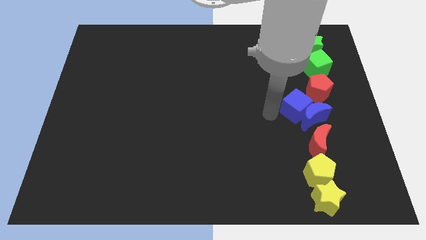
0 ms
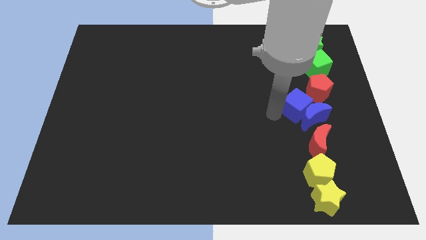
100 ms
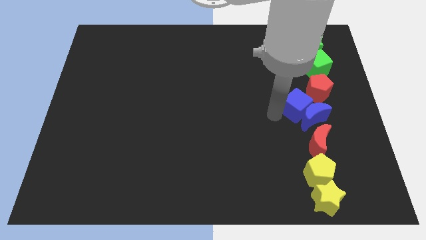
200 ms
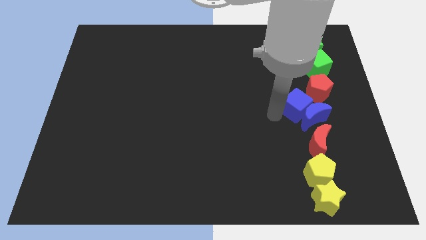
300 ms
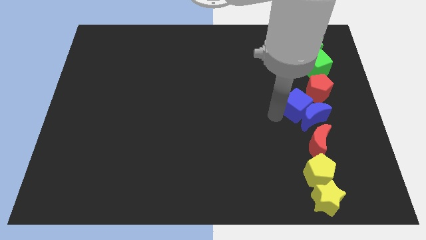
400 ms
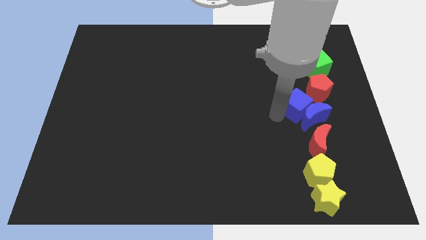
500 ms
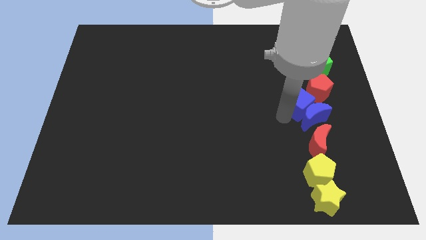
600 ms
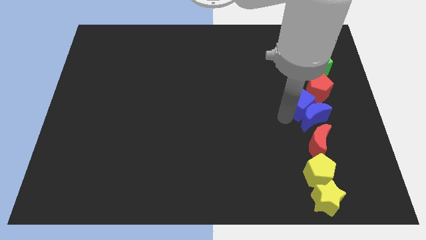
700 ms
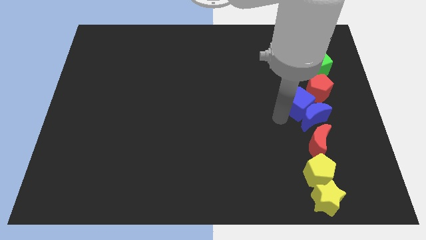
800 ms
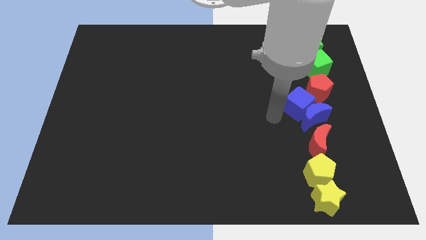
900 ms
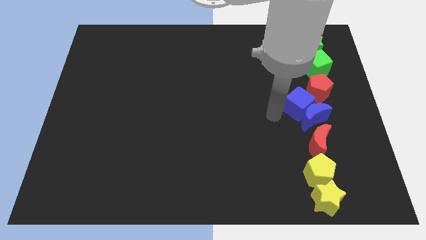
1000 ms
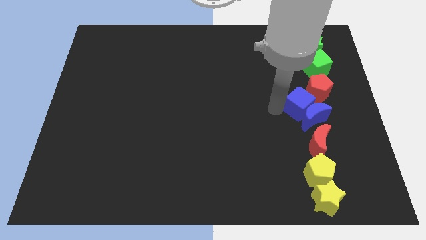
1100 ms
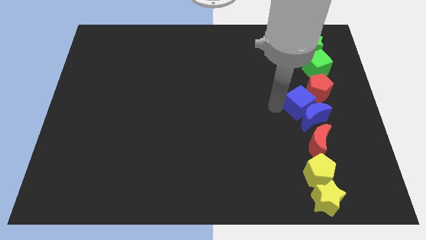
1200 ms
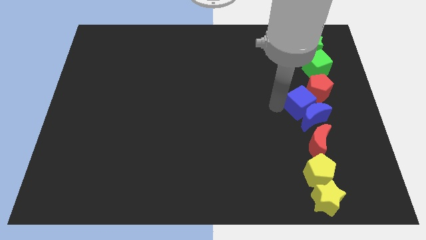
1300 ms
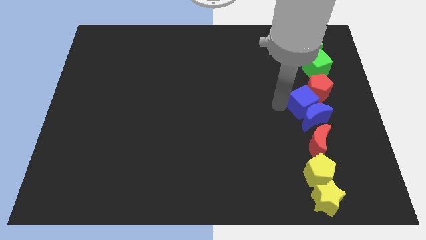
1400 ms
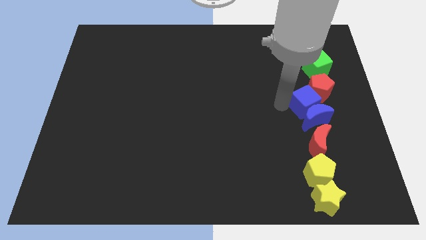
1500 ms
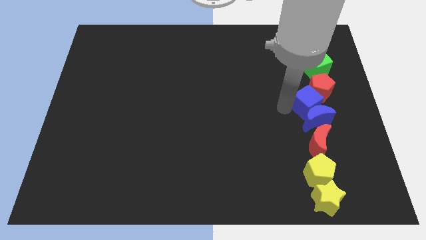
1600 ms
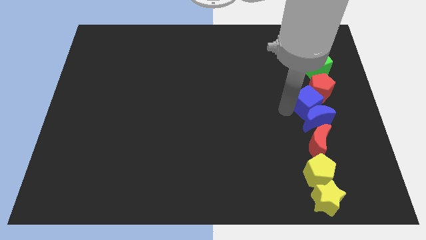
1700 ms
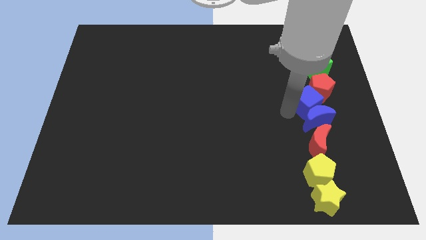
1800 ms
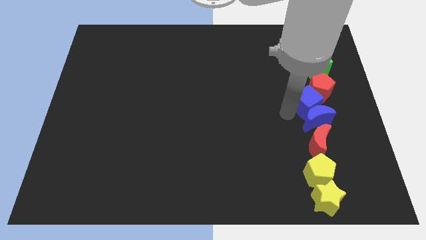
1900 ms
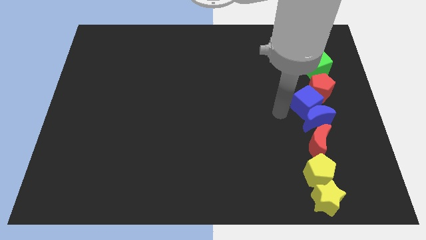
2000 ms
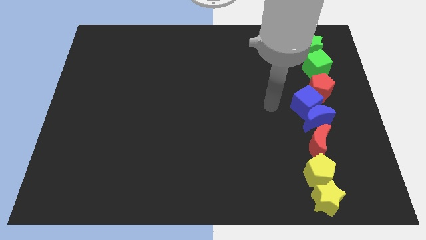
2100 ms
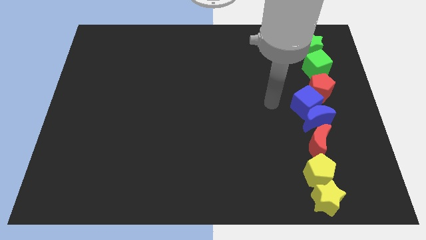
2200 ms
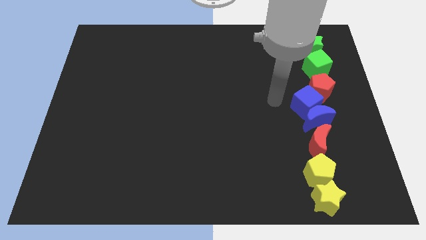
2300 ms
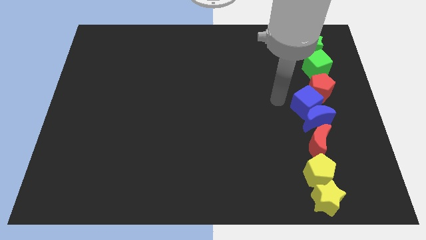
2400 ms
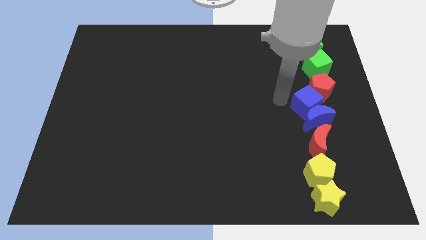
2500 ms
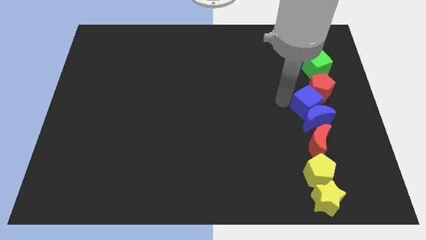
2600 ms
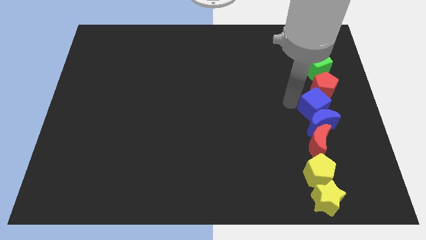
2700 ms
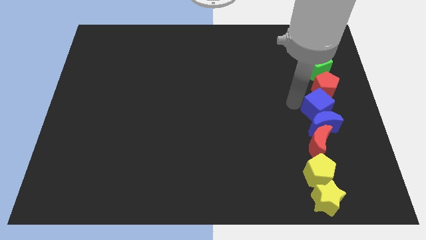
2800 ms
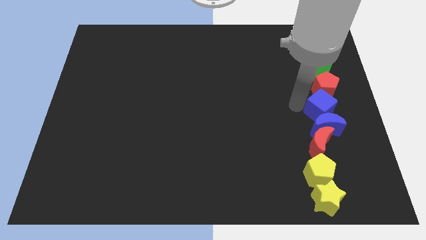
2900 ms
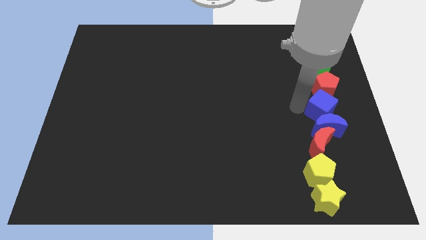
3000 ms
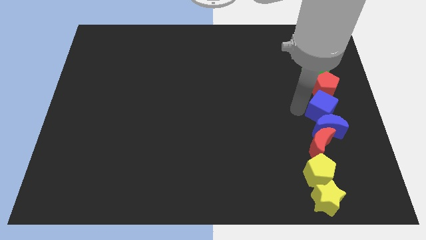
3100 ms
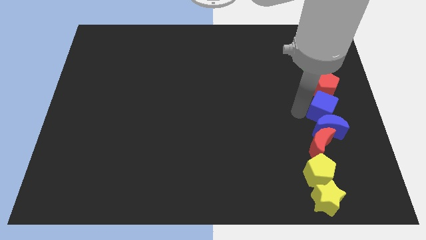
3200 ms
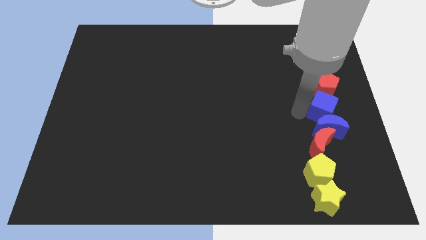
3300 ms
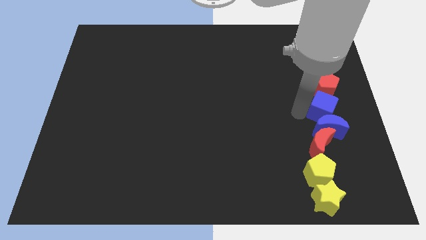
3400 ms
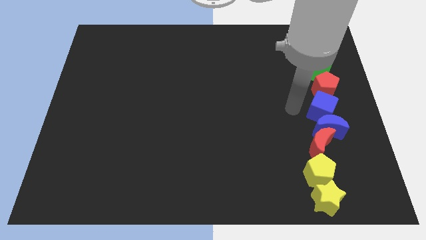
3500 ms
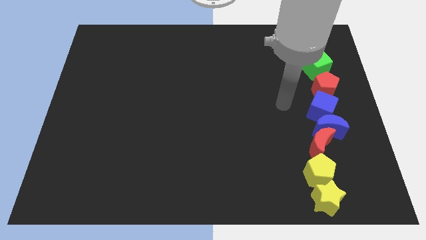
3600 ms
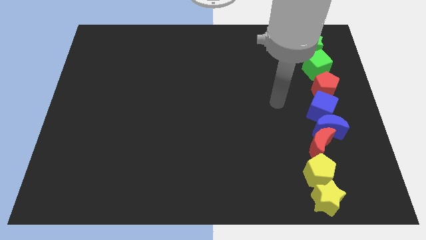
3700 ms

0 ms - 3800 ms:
place blue cube between red pentagon and blue crescent

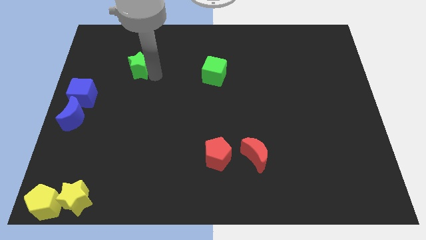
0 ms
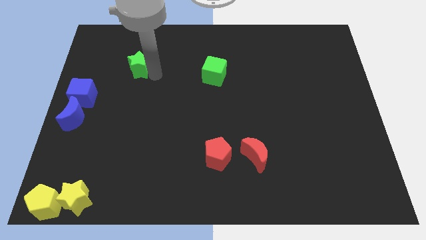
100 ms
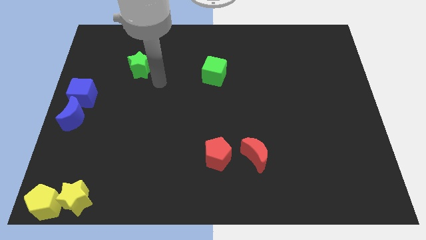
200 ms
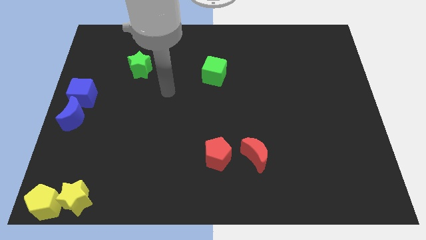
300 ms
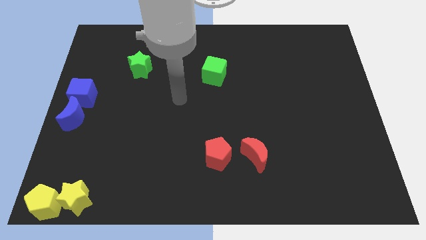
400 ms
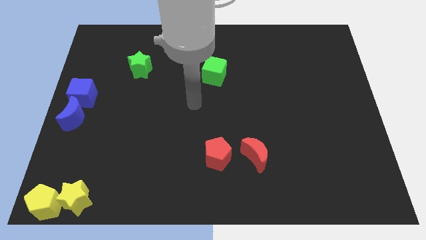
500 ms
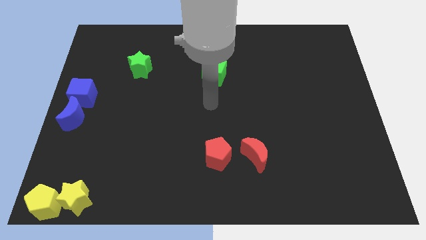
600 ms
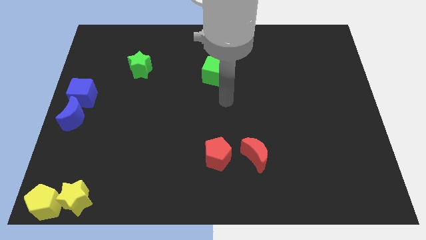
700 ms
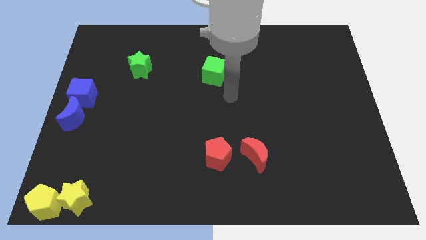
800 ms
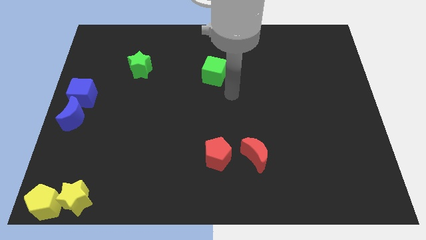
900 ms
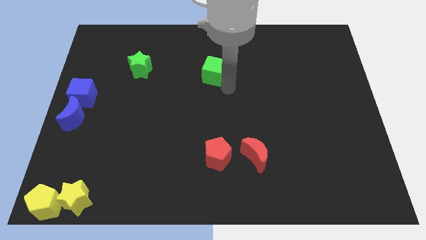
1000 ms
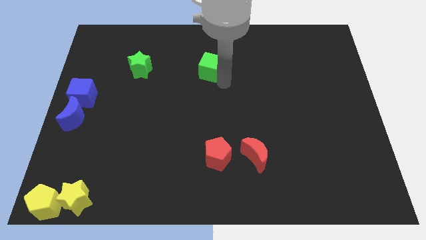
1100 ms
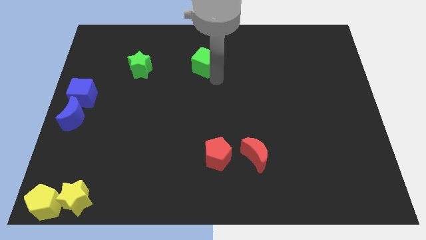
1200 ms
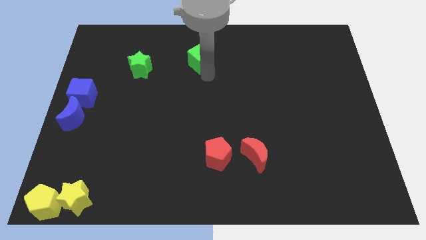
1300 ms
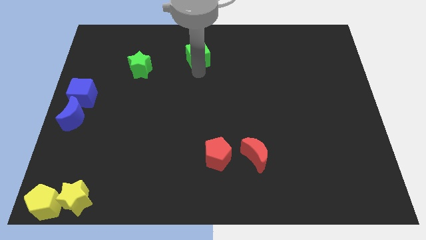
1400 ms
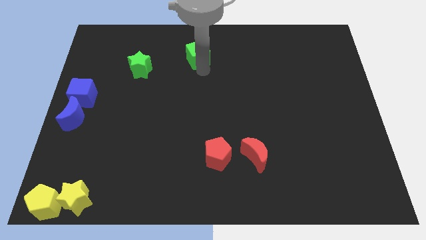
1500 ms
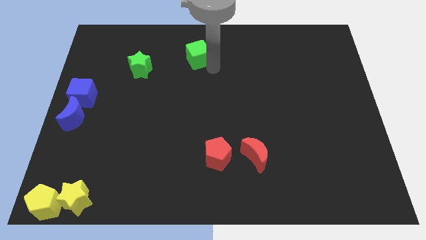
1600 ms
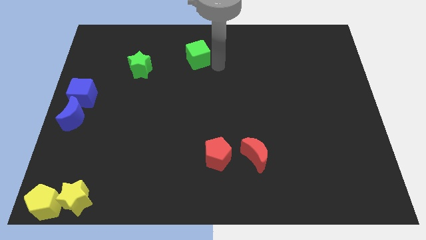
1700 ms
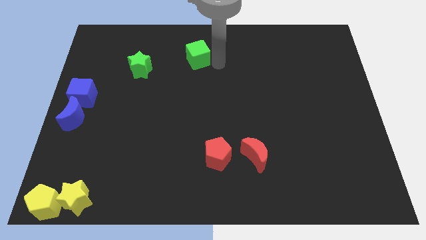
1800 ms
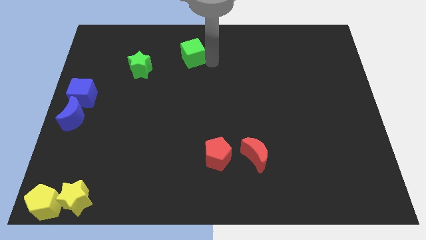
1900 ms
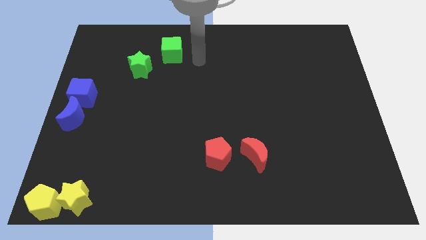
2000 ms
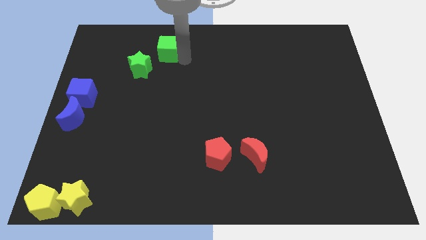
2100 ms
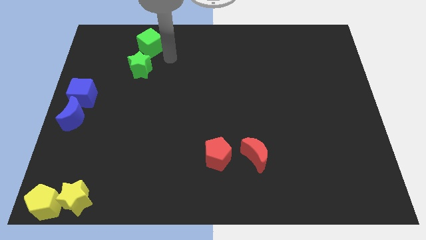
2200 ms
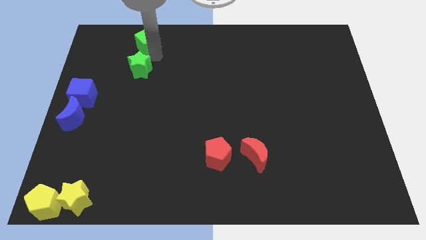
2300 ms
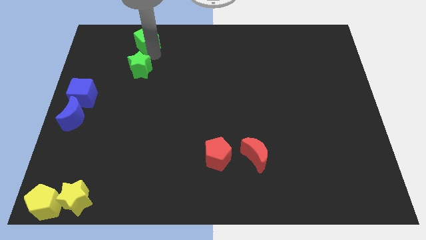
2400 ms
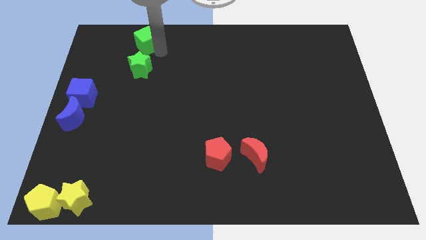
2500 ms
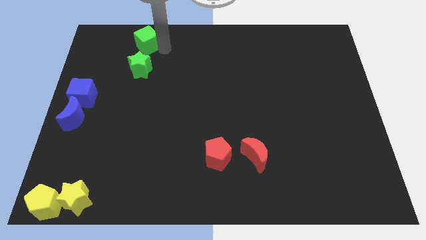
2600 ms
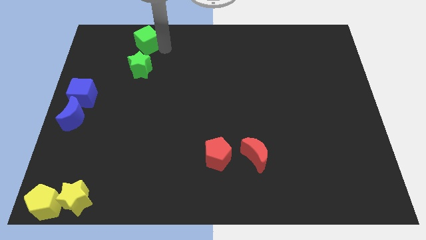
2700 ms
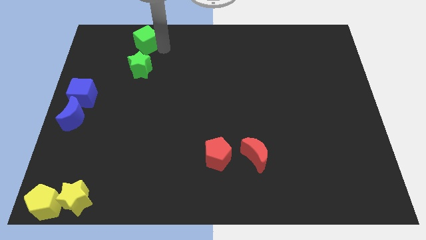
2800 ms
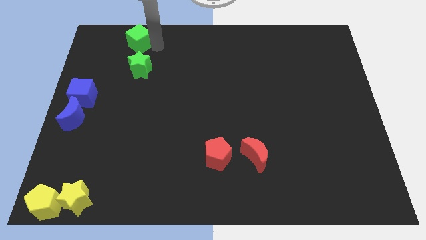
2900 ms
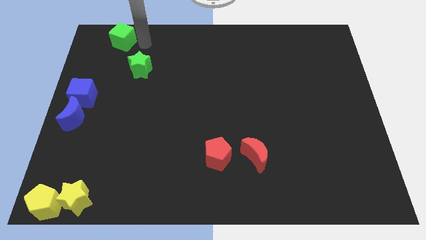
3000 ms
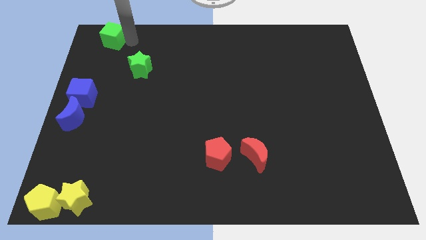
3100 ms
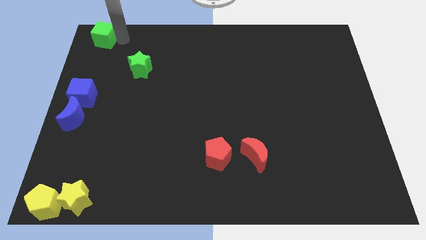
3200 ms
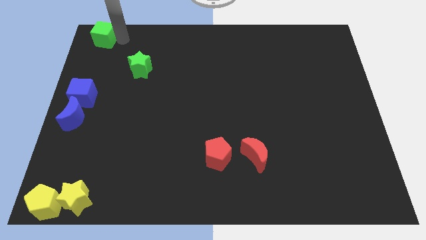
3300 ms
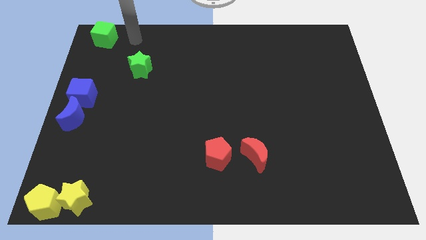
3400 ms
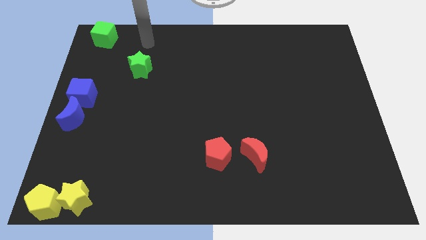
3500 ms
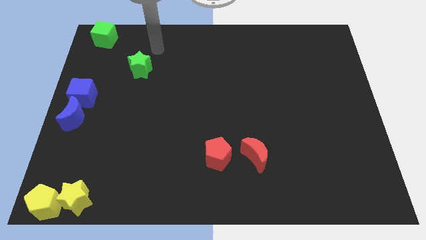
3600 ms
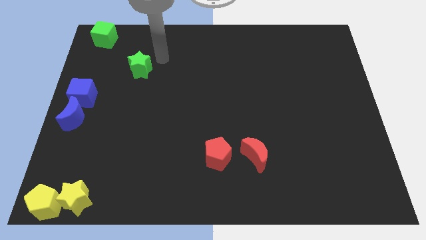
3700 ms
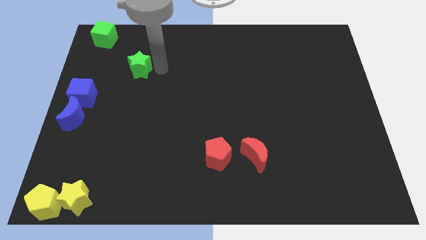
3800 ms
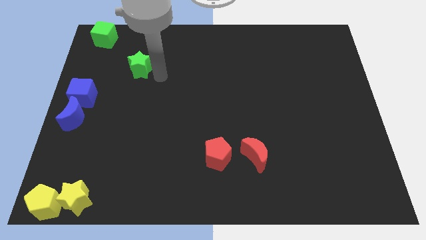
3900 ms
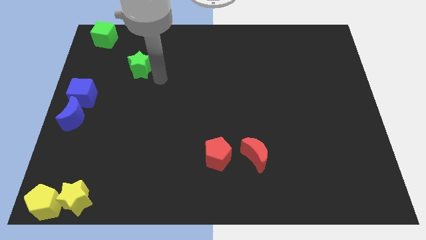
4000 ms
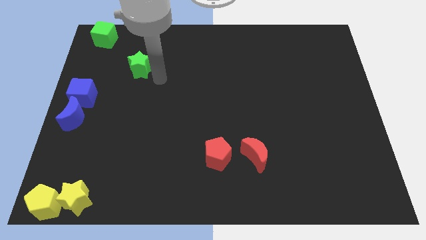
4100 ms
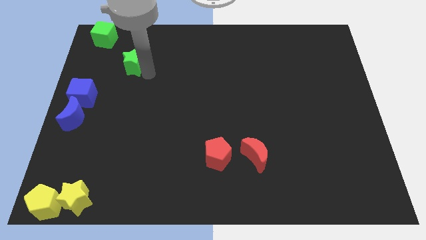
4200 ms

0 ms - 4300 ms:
place the green cube above the blue cube

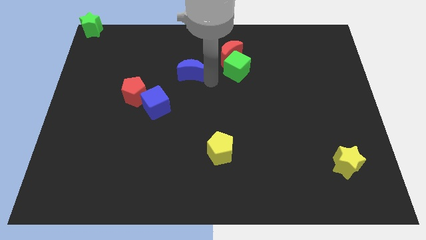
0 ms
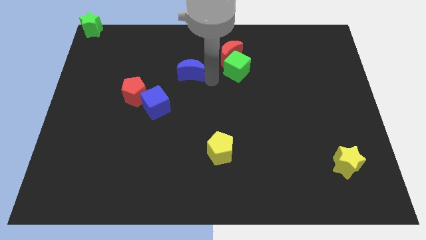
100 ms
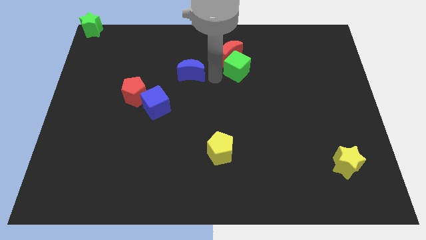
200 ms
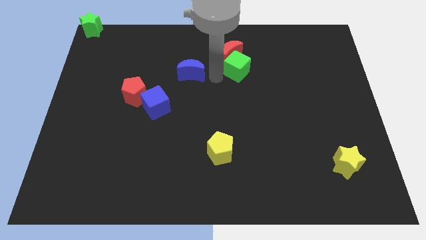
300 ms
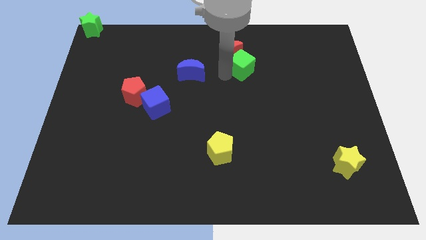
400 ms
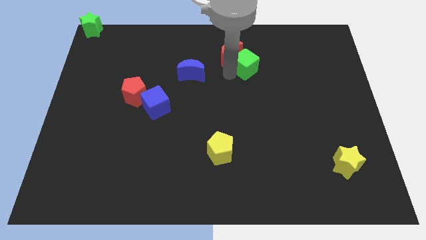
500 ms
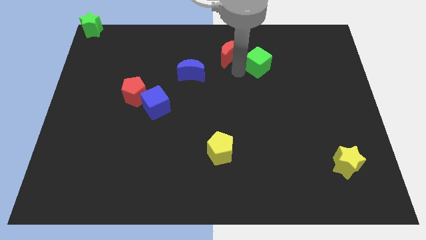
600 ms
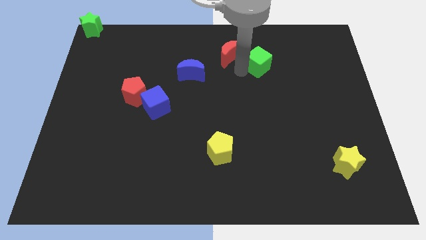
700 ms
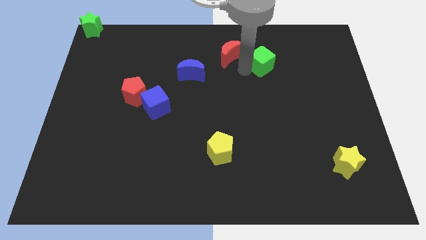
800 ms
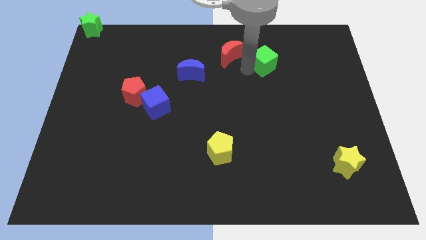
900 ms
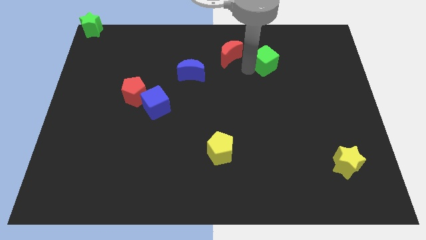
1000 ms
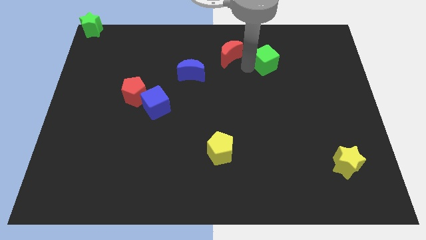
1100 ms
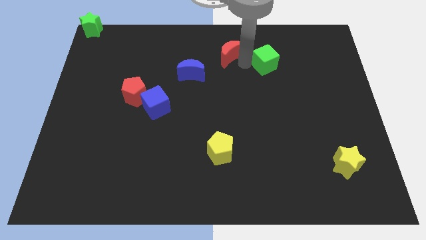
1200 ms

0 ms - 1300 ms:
seperate green cube and red moon
